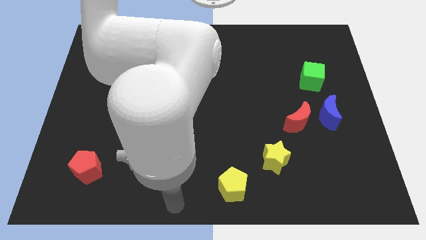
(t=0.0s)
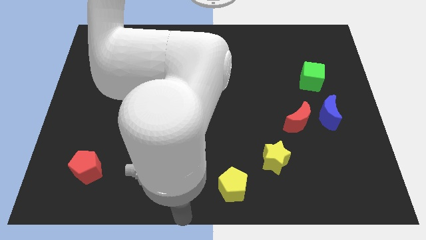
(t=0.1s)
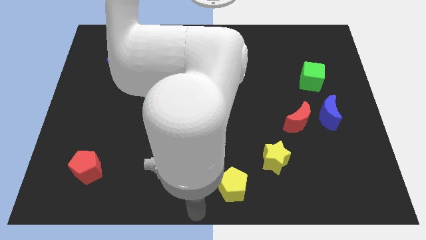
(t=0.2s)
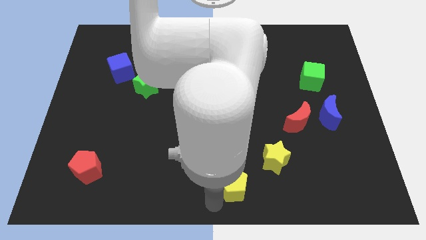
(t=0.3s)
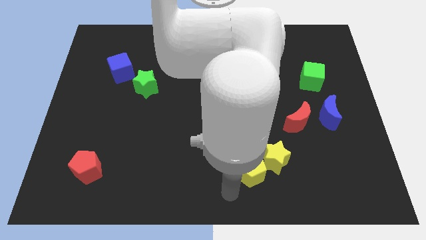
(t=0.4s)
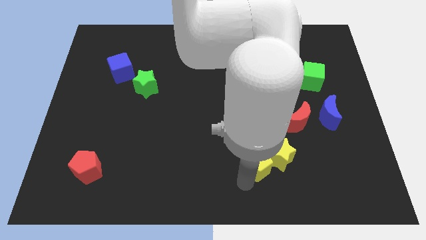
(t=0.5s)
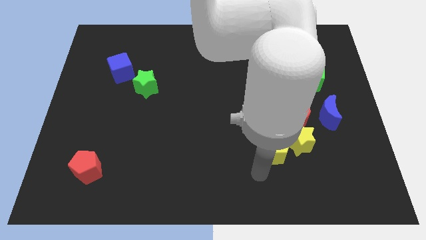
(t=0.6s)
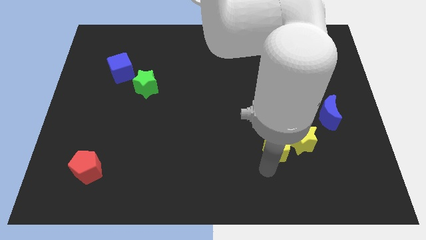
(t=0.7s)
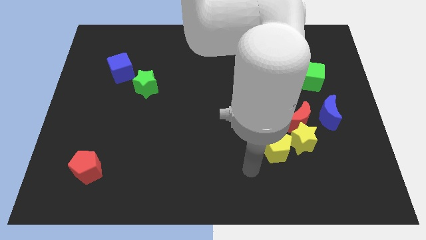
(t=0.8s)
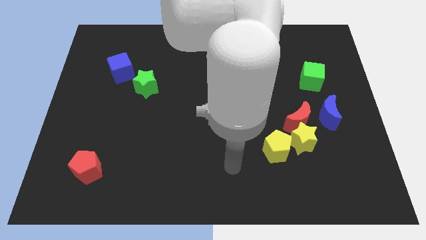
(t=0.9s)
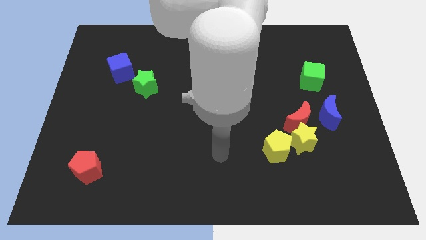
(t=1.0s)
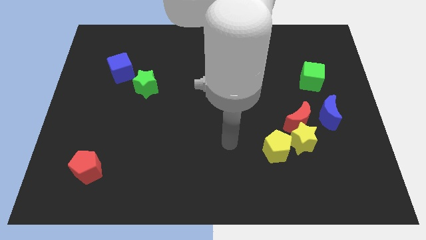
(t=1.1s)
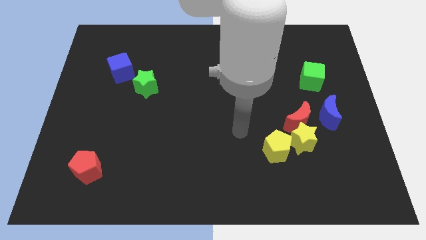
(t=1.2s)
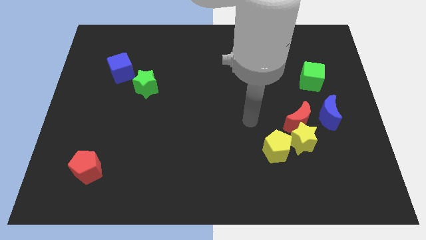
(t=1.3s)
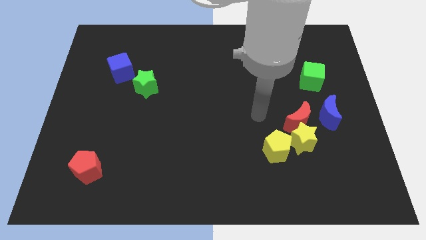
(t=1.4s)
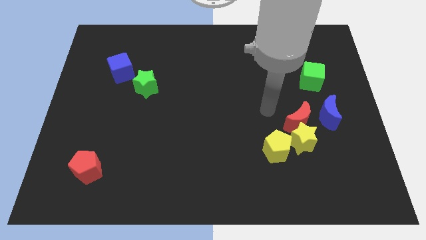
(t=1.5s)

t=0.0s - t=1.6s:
push the yellow pentagon into the yellow star

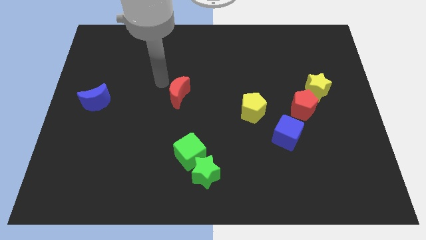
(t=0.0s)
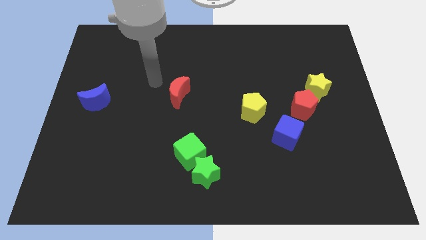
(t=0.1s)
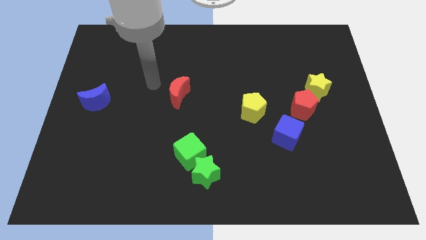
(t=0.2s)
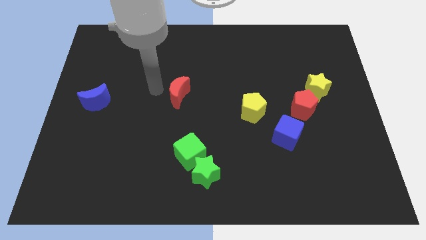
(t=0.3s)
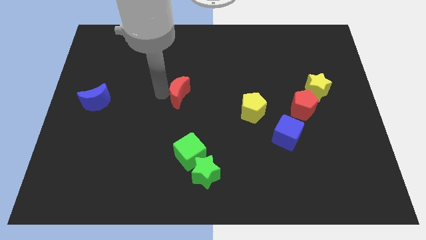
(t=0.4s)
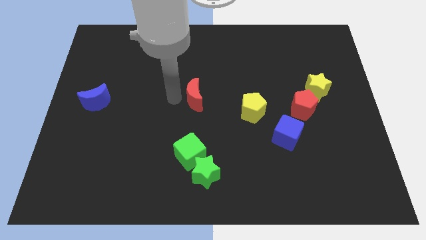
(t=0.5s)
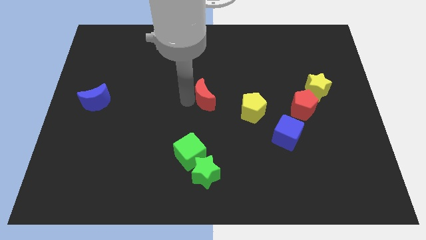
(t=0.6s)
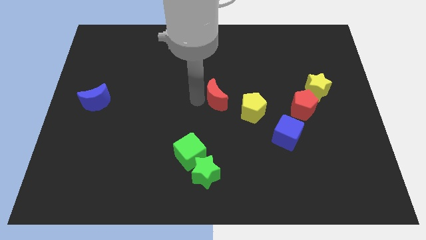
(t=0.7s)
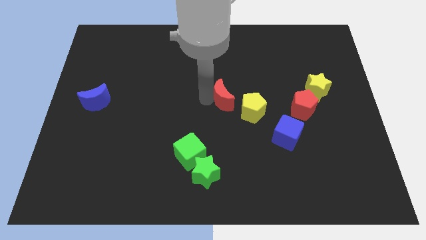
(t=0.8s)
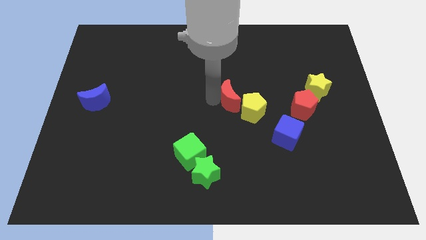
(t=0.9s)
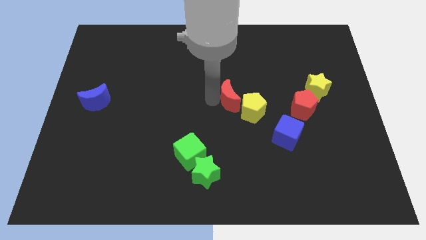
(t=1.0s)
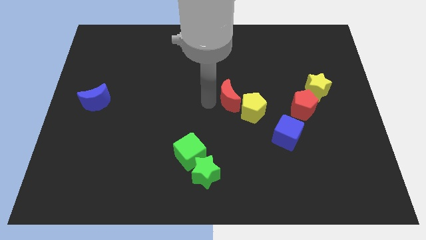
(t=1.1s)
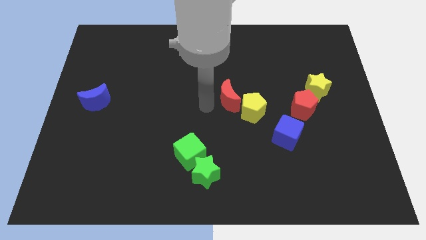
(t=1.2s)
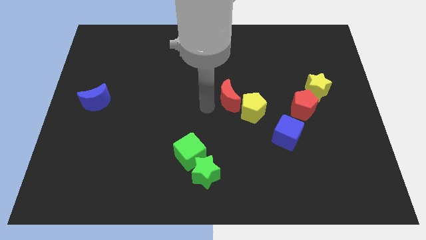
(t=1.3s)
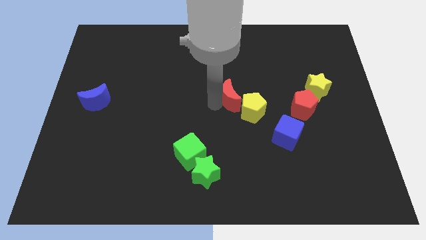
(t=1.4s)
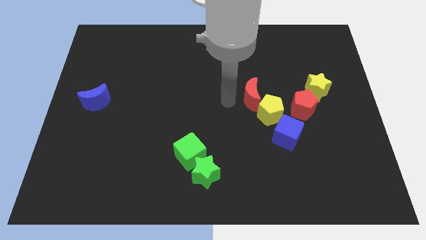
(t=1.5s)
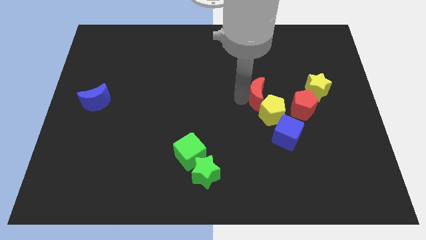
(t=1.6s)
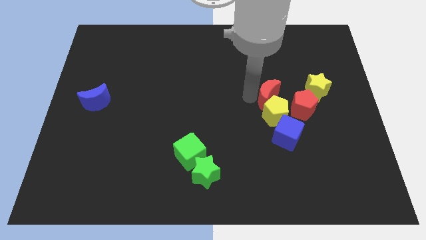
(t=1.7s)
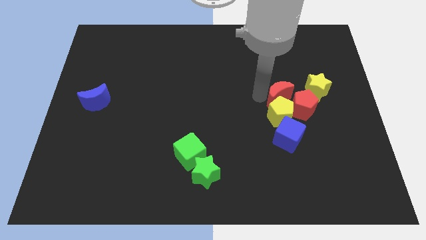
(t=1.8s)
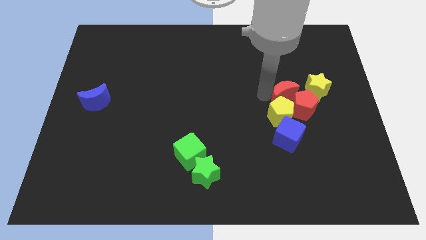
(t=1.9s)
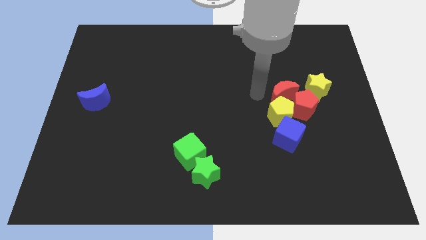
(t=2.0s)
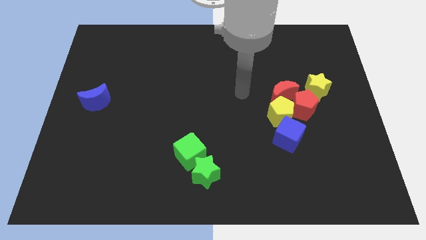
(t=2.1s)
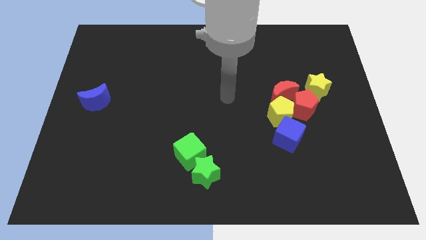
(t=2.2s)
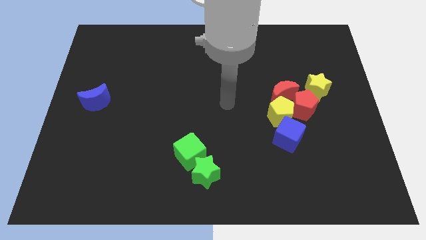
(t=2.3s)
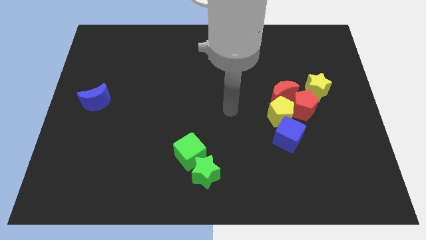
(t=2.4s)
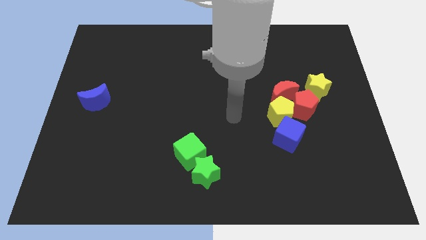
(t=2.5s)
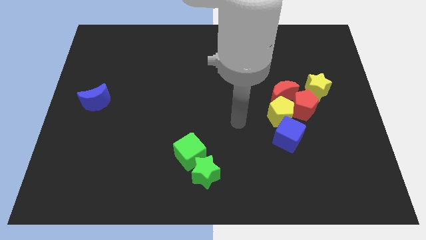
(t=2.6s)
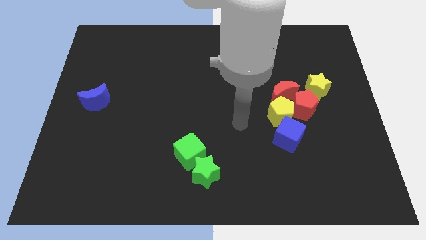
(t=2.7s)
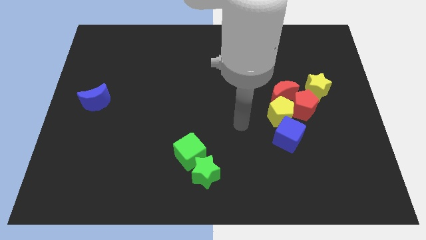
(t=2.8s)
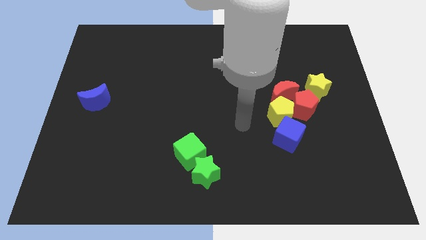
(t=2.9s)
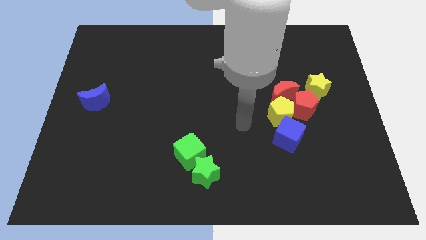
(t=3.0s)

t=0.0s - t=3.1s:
move the red moon into the red pentagon and the yellow pentagon

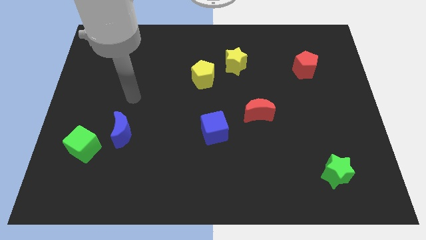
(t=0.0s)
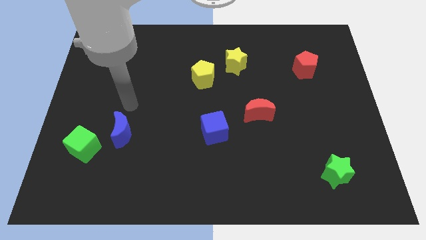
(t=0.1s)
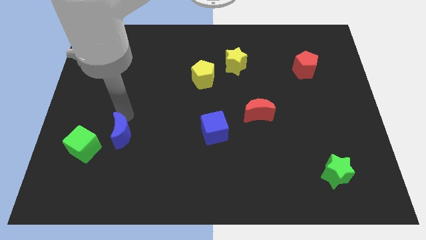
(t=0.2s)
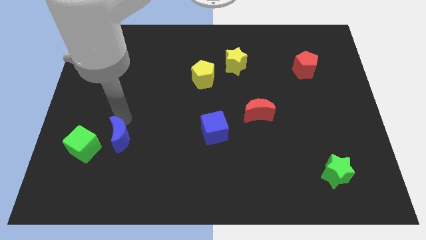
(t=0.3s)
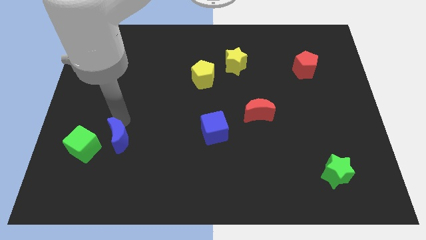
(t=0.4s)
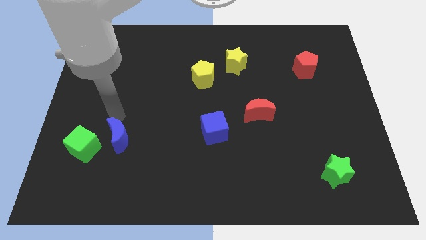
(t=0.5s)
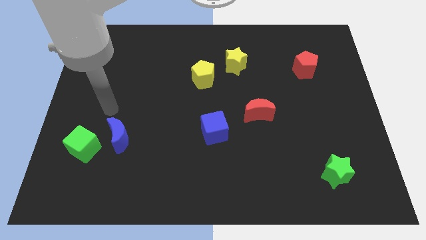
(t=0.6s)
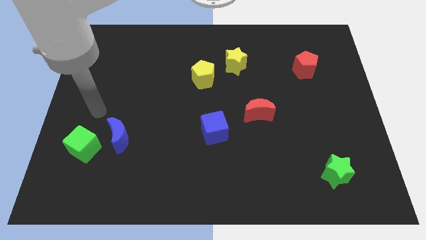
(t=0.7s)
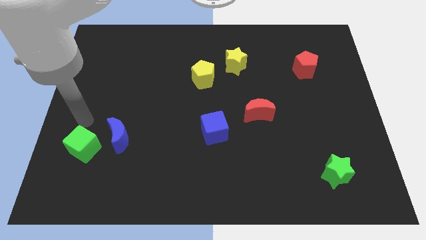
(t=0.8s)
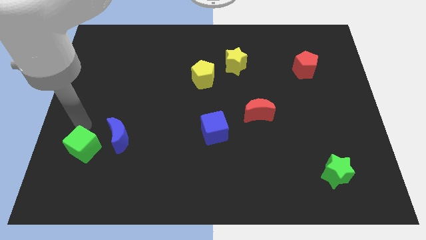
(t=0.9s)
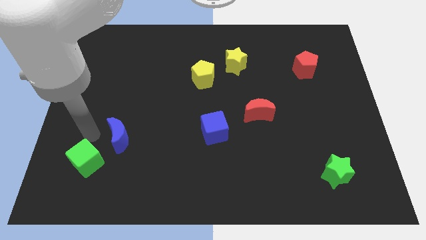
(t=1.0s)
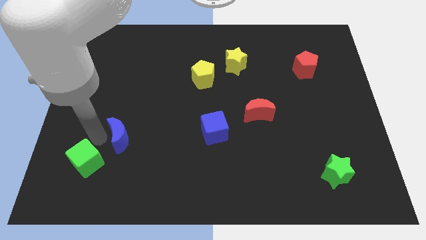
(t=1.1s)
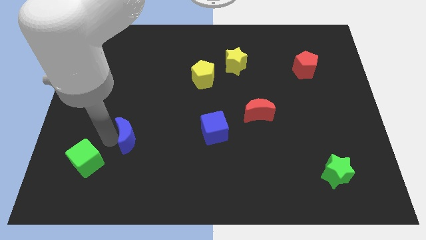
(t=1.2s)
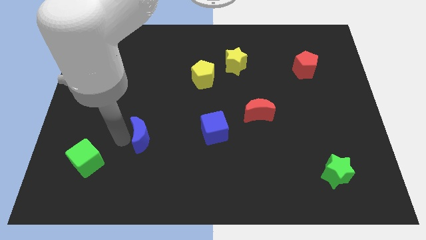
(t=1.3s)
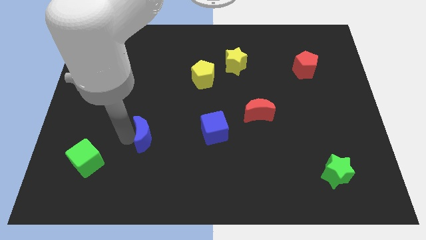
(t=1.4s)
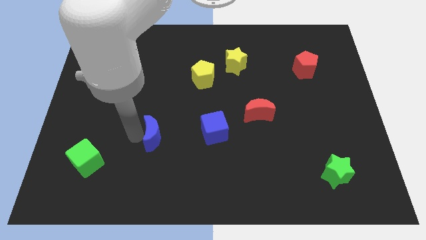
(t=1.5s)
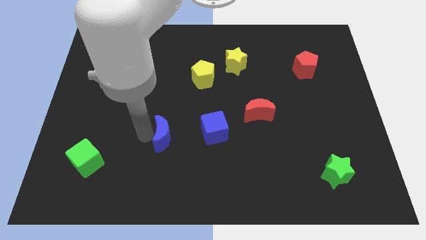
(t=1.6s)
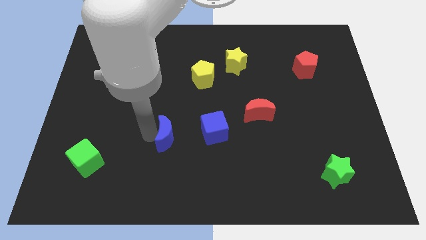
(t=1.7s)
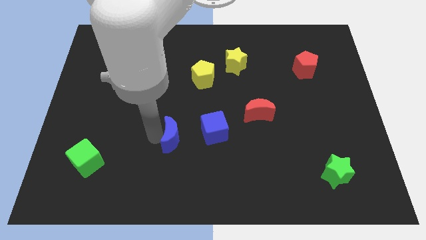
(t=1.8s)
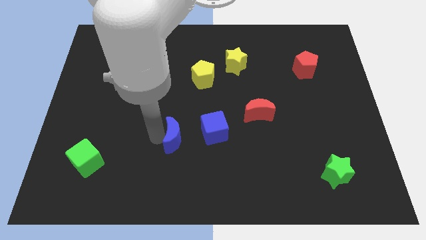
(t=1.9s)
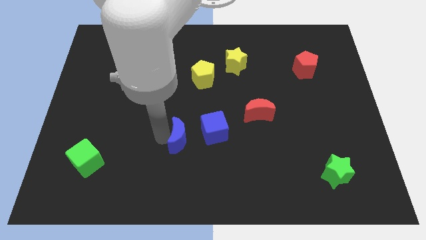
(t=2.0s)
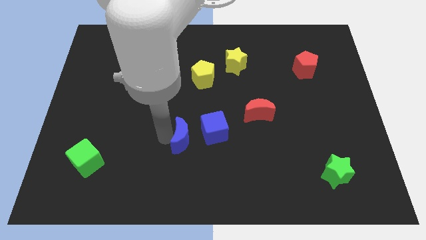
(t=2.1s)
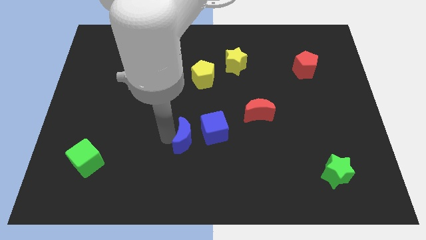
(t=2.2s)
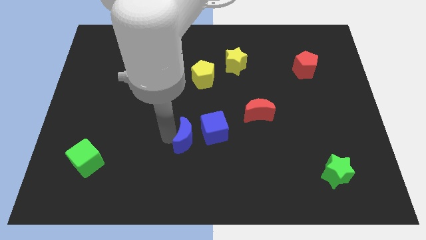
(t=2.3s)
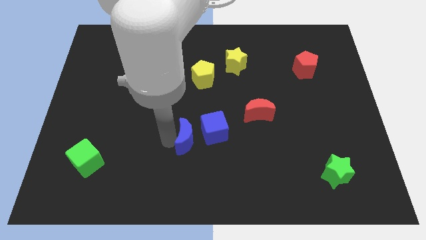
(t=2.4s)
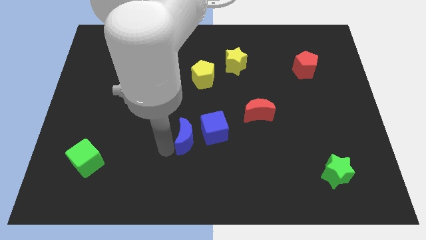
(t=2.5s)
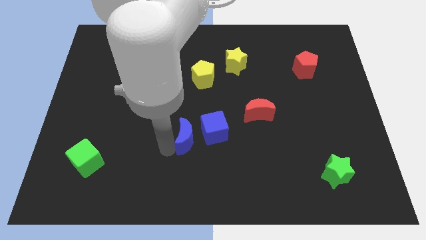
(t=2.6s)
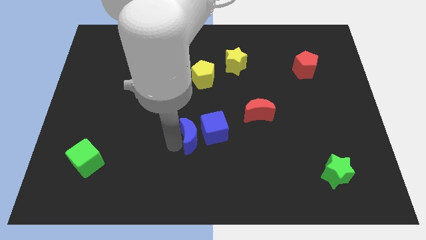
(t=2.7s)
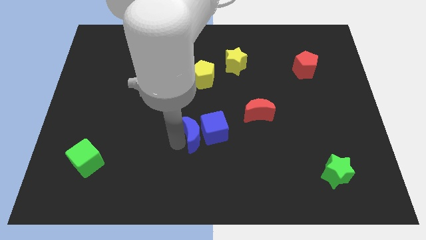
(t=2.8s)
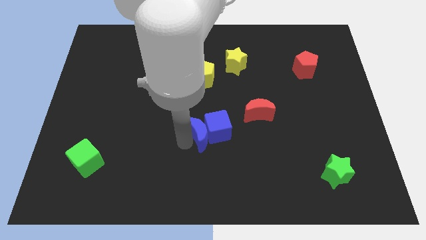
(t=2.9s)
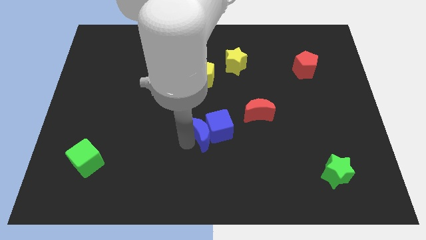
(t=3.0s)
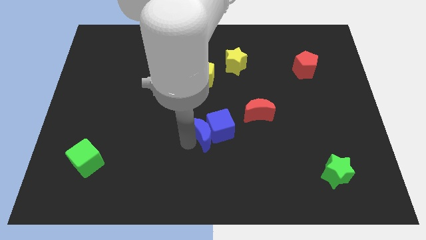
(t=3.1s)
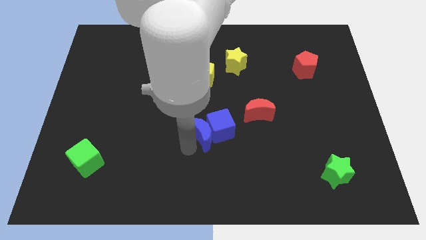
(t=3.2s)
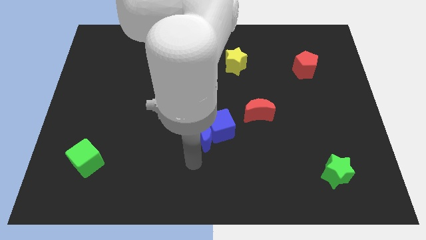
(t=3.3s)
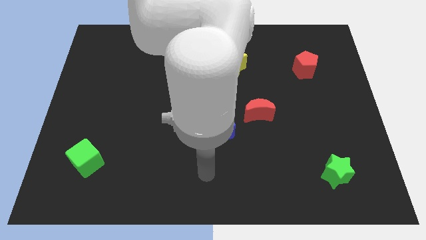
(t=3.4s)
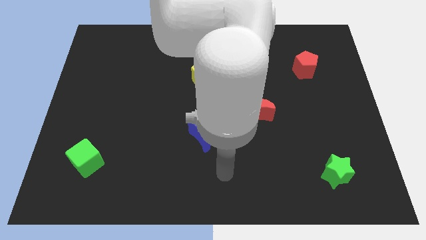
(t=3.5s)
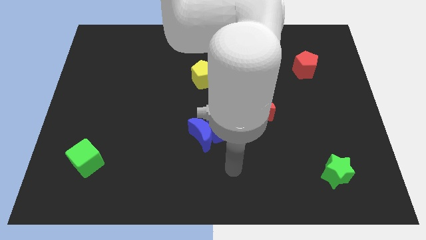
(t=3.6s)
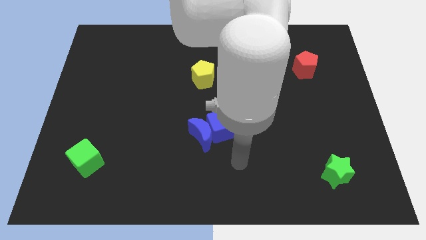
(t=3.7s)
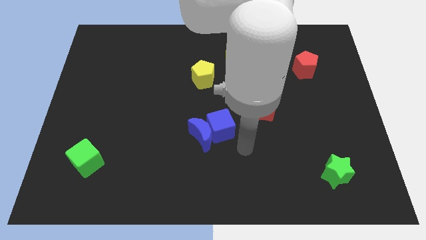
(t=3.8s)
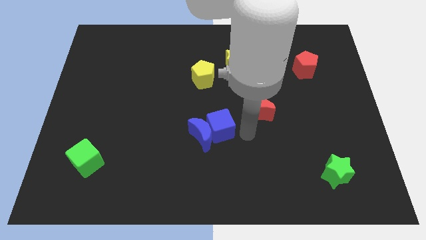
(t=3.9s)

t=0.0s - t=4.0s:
push the blue crescent into the blue cube
